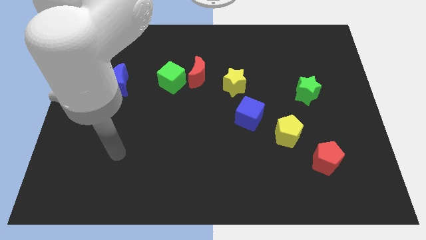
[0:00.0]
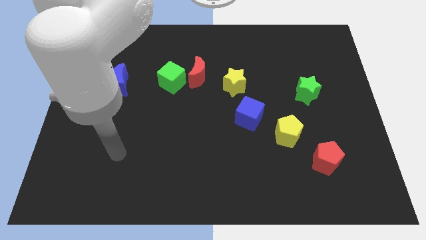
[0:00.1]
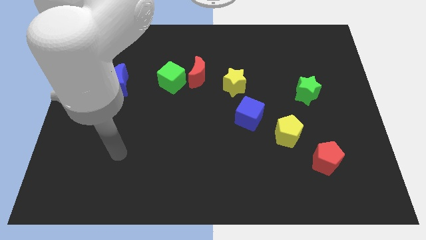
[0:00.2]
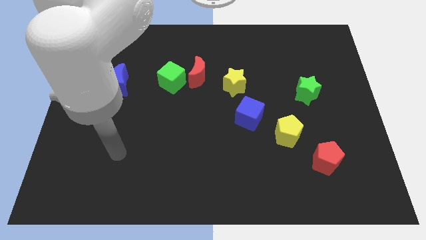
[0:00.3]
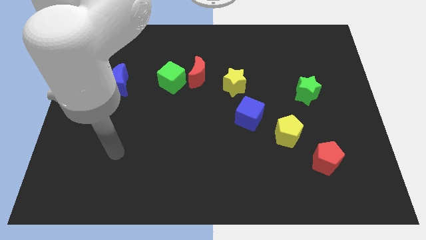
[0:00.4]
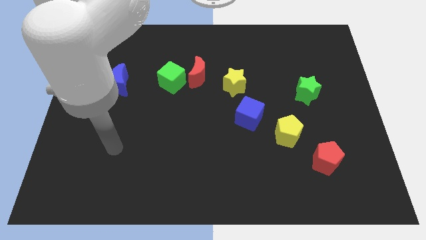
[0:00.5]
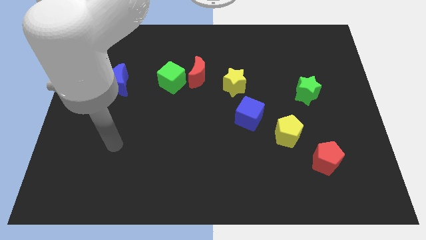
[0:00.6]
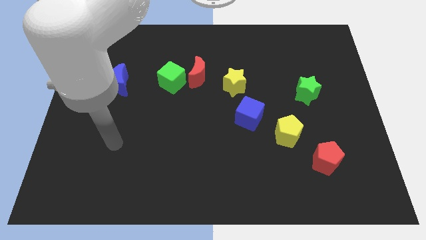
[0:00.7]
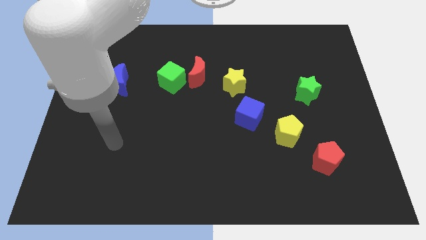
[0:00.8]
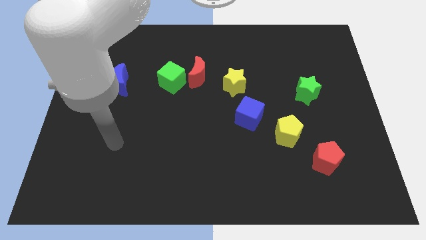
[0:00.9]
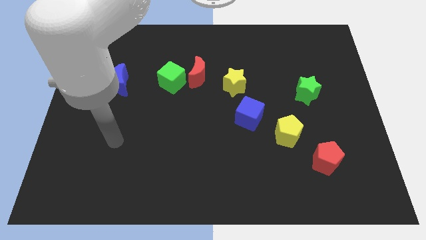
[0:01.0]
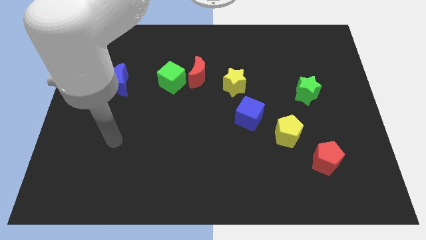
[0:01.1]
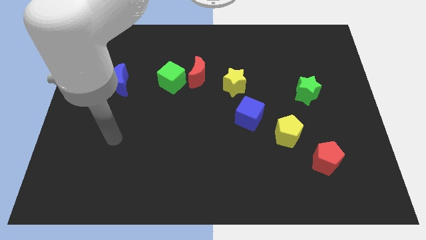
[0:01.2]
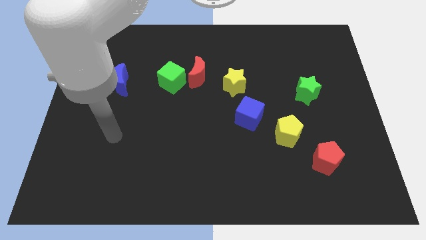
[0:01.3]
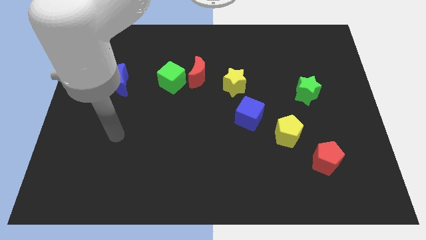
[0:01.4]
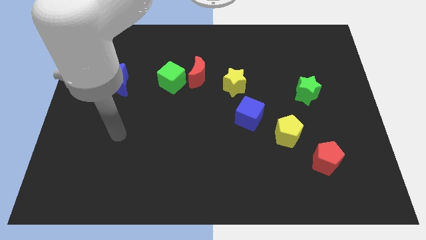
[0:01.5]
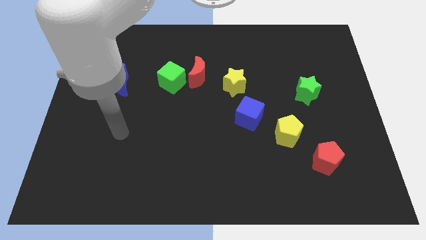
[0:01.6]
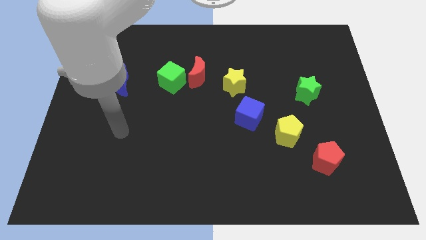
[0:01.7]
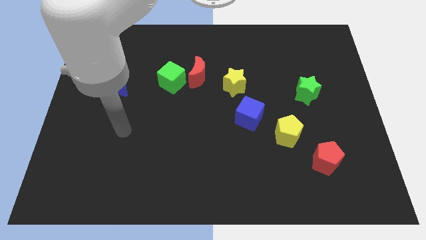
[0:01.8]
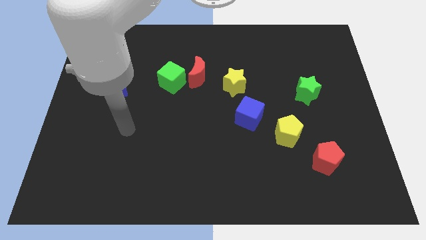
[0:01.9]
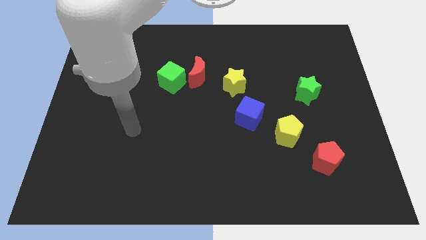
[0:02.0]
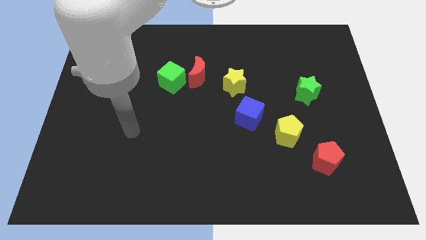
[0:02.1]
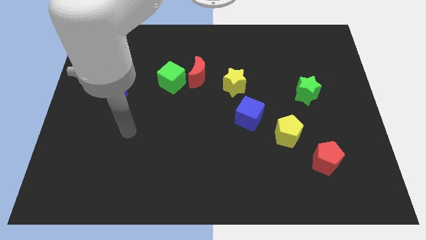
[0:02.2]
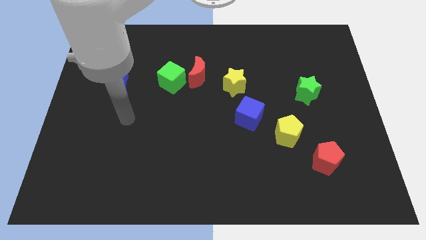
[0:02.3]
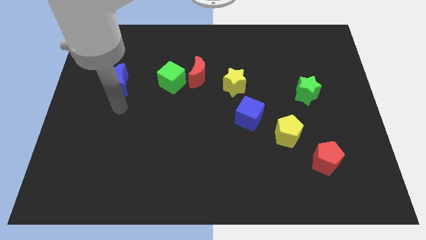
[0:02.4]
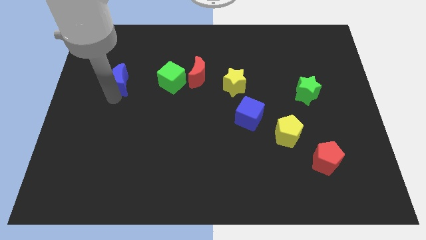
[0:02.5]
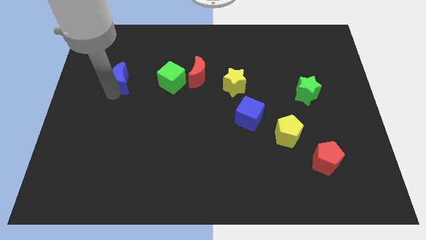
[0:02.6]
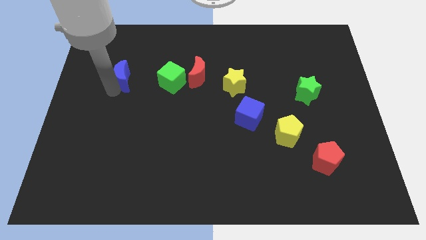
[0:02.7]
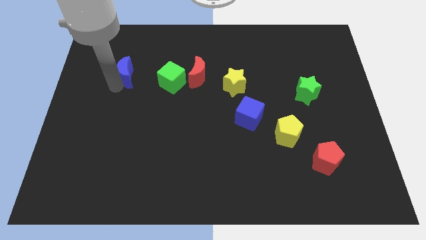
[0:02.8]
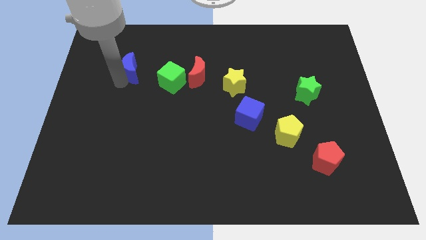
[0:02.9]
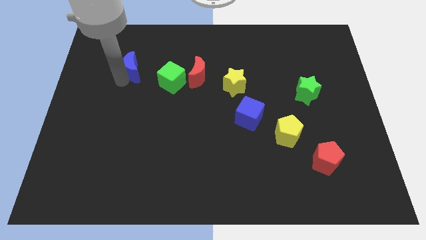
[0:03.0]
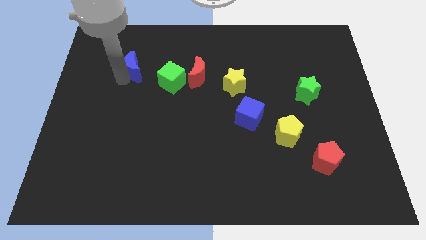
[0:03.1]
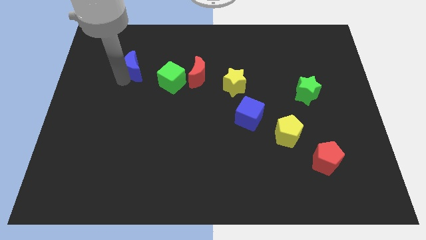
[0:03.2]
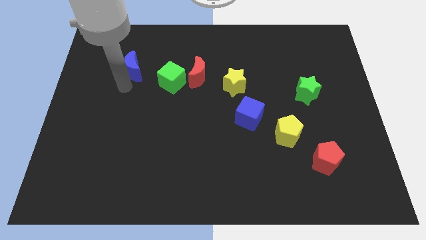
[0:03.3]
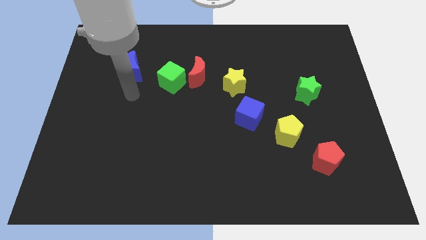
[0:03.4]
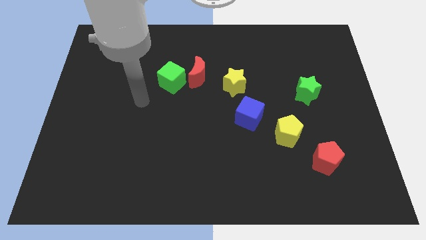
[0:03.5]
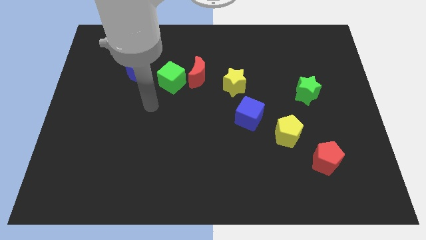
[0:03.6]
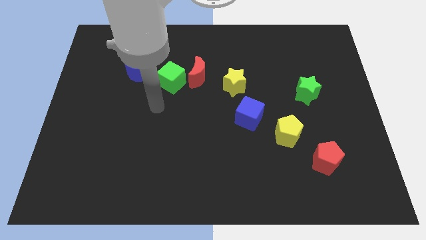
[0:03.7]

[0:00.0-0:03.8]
move the blue crescent to the top left side of the green cube

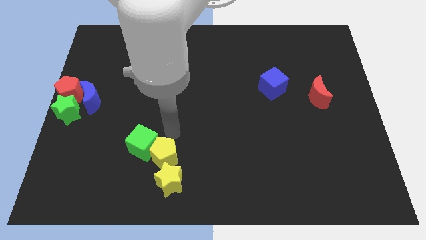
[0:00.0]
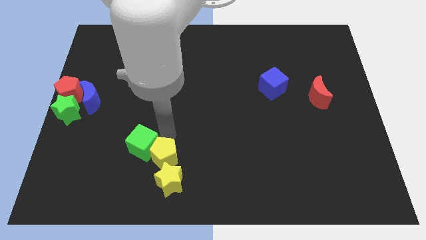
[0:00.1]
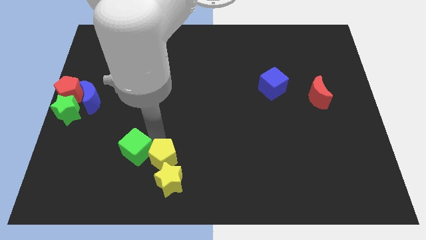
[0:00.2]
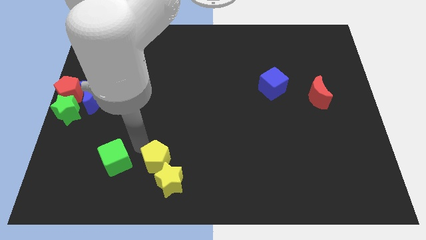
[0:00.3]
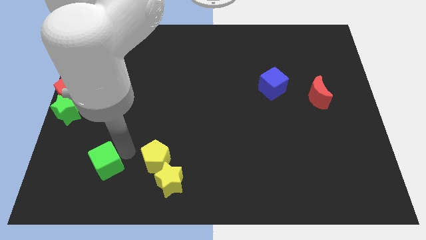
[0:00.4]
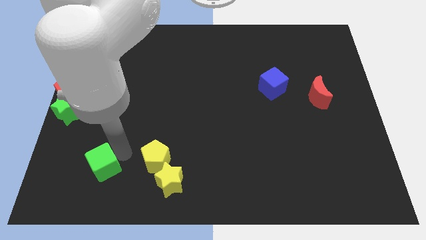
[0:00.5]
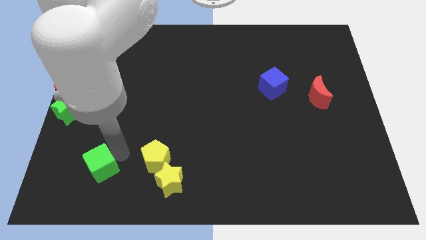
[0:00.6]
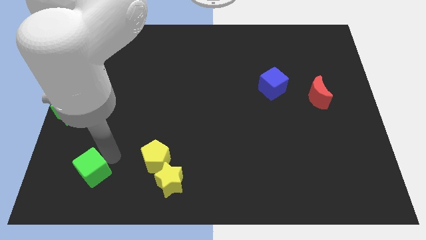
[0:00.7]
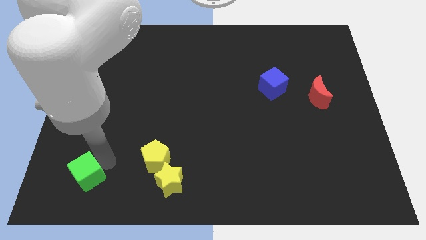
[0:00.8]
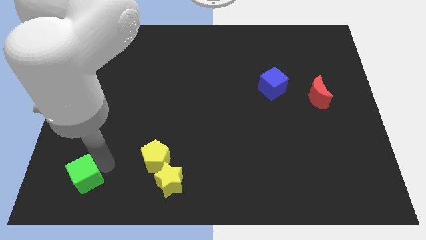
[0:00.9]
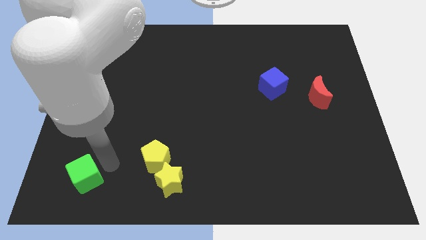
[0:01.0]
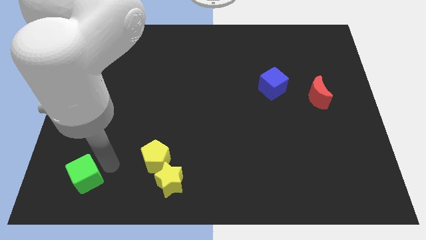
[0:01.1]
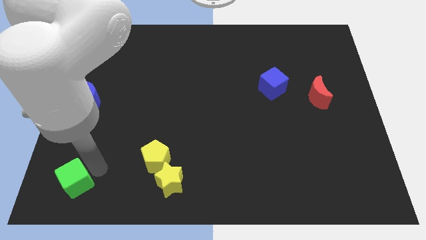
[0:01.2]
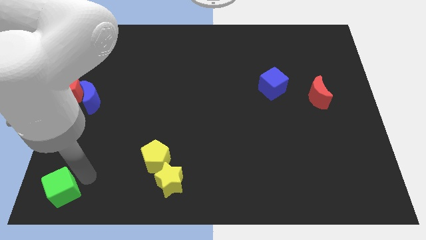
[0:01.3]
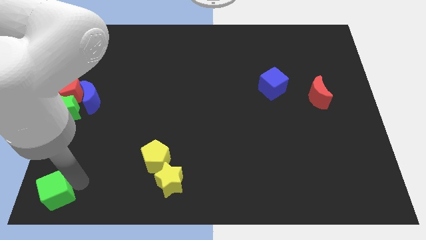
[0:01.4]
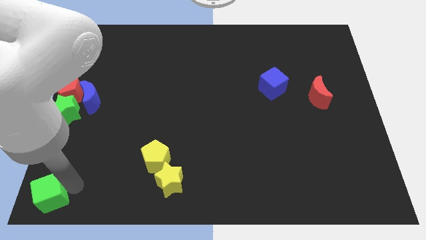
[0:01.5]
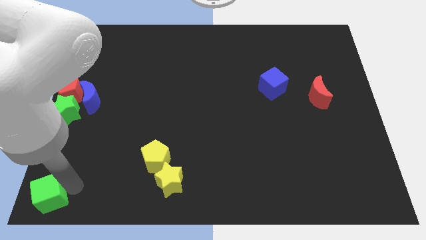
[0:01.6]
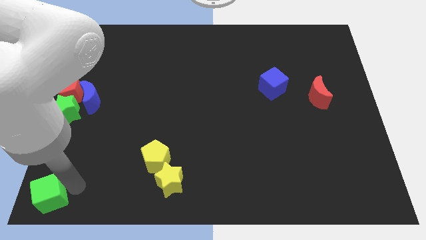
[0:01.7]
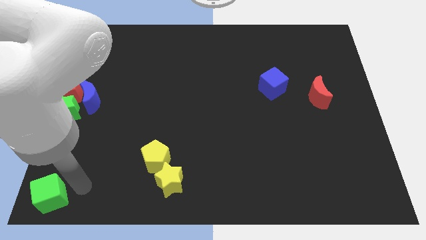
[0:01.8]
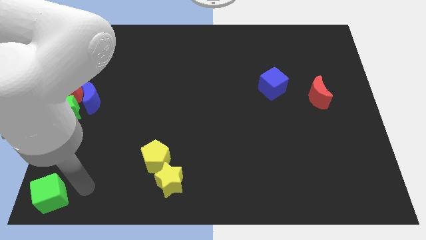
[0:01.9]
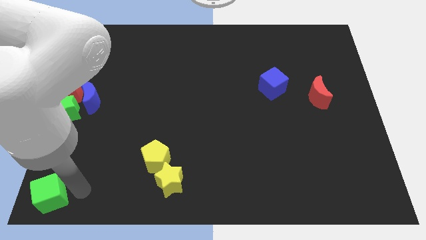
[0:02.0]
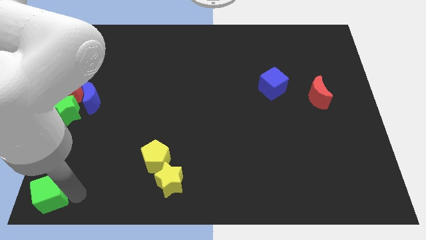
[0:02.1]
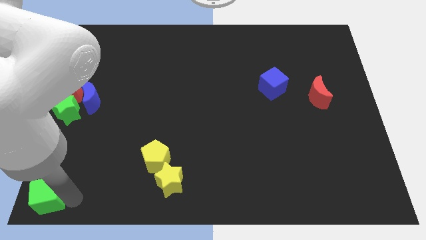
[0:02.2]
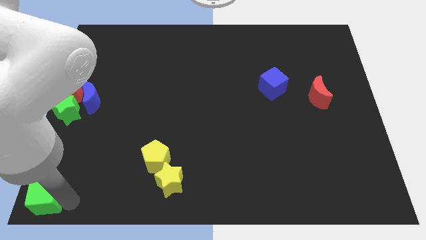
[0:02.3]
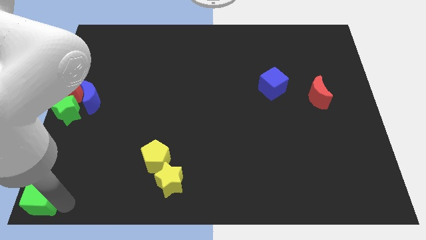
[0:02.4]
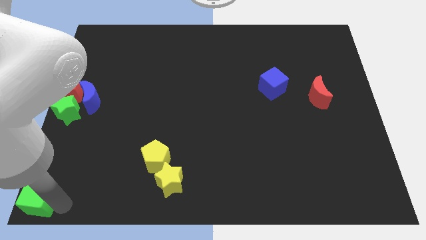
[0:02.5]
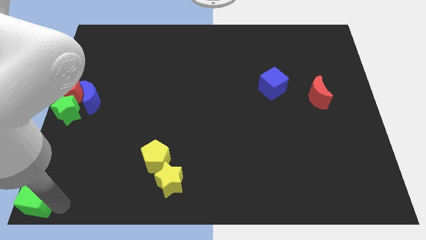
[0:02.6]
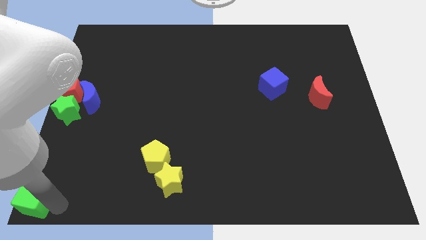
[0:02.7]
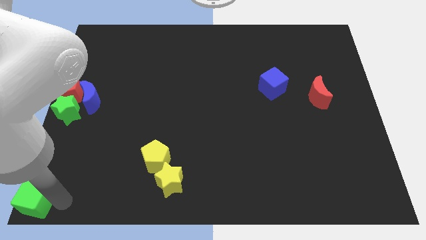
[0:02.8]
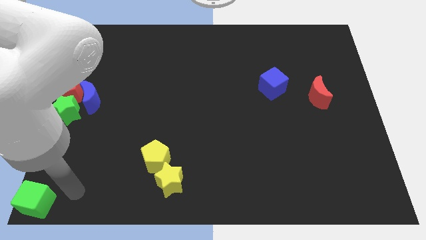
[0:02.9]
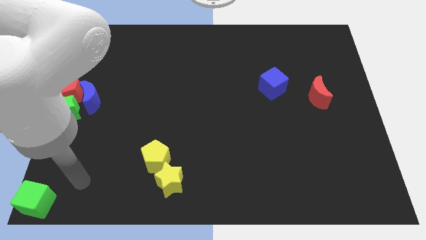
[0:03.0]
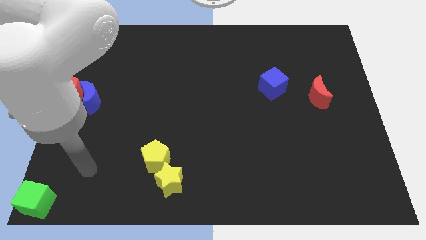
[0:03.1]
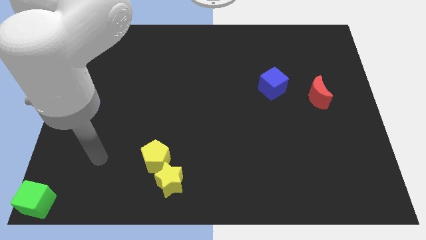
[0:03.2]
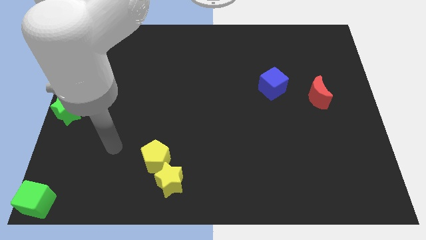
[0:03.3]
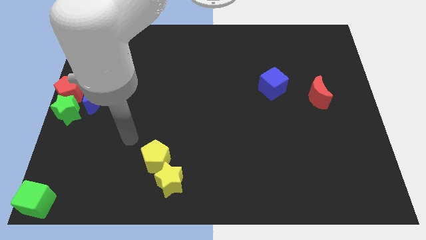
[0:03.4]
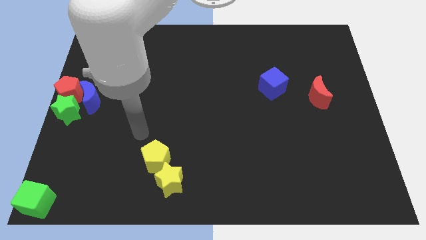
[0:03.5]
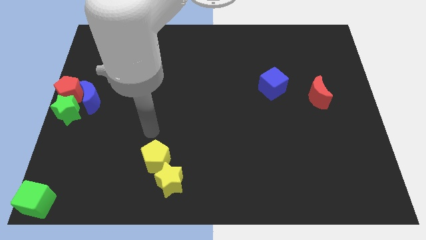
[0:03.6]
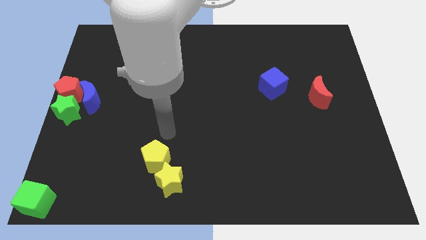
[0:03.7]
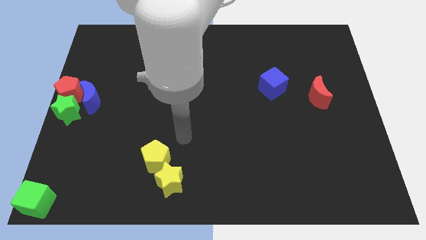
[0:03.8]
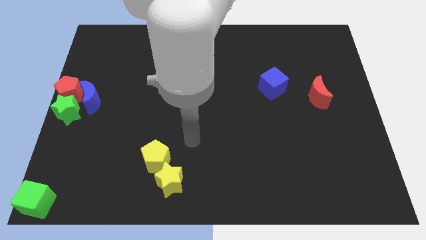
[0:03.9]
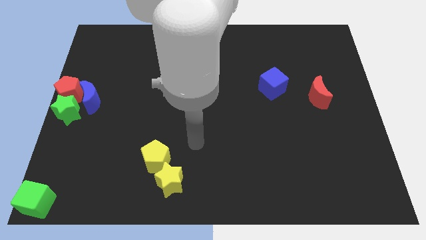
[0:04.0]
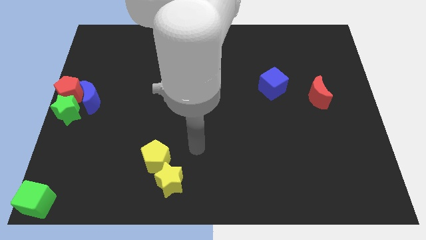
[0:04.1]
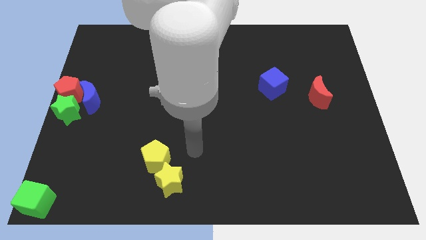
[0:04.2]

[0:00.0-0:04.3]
push the green cube to the bottom left of the board

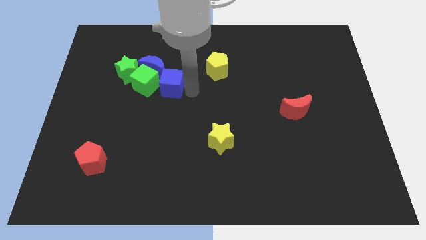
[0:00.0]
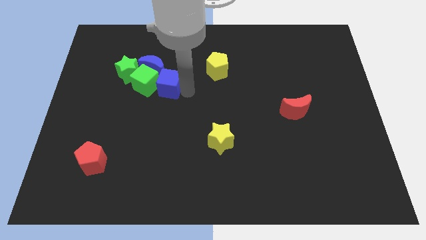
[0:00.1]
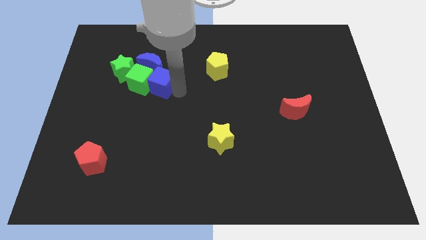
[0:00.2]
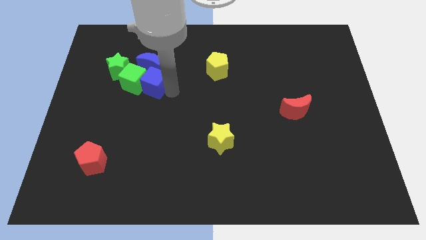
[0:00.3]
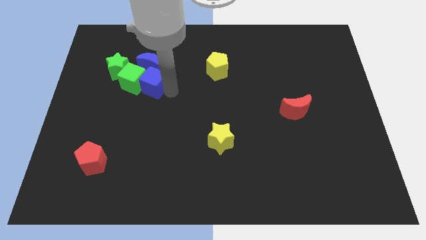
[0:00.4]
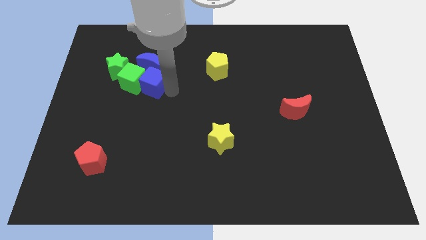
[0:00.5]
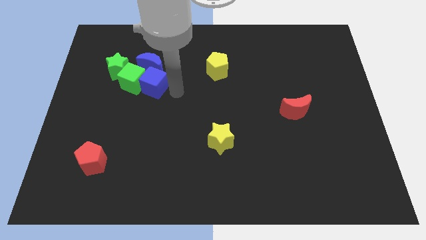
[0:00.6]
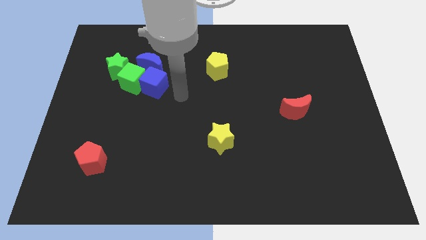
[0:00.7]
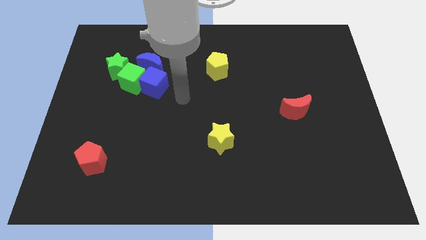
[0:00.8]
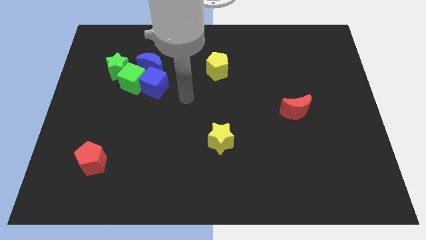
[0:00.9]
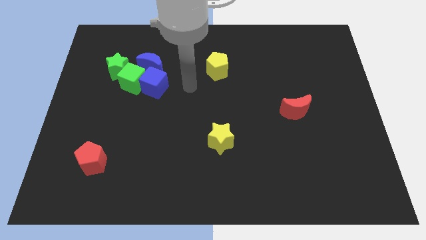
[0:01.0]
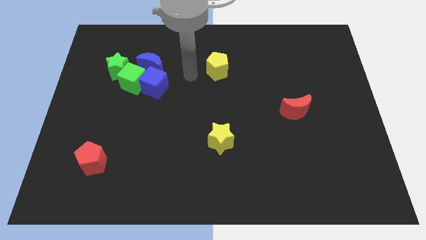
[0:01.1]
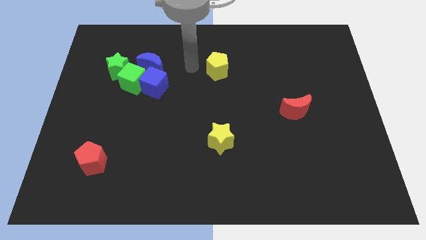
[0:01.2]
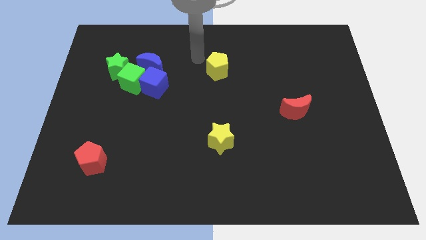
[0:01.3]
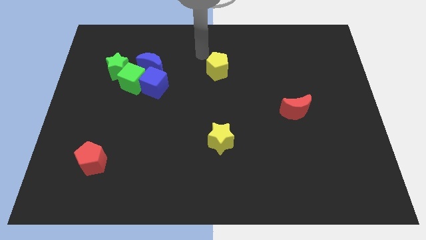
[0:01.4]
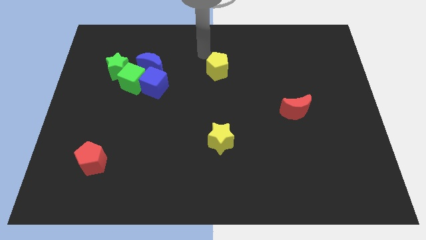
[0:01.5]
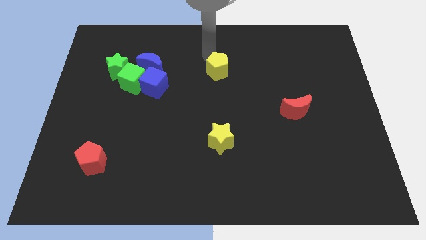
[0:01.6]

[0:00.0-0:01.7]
place the arm above the yellow pentagon
